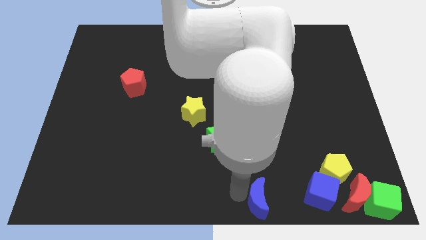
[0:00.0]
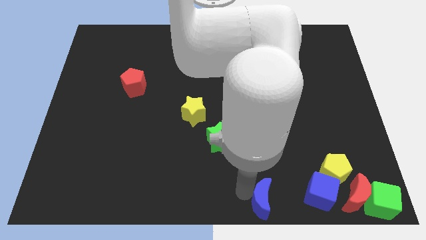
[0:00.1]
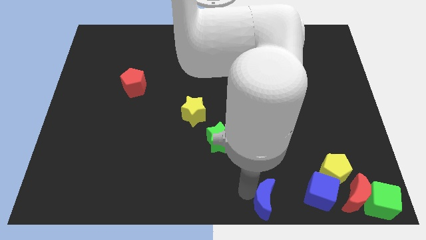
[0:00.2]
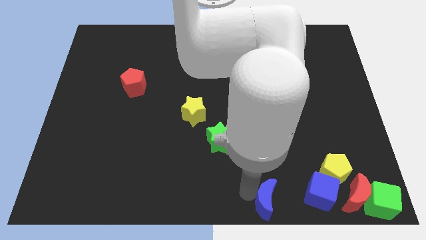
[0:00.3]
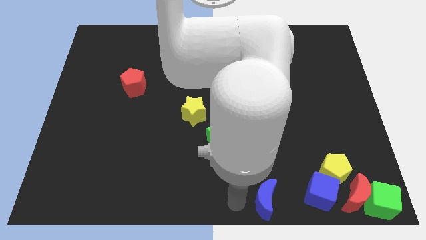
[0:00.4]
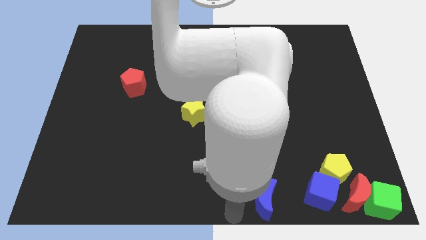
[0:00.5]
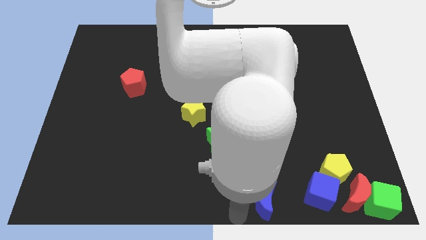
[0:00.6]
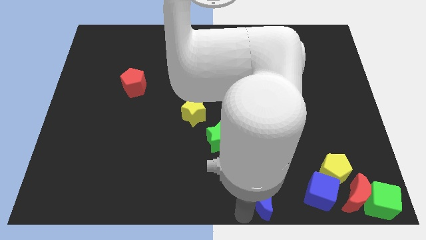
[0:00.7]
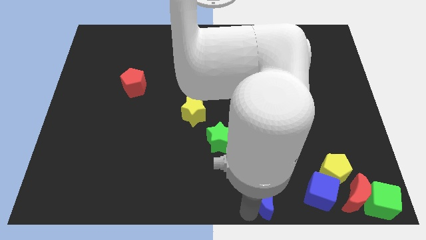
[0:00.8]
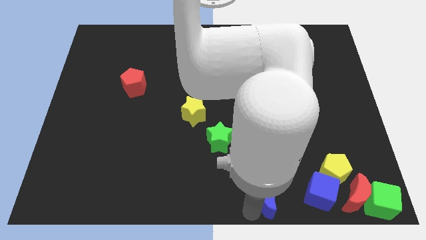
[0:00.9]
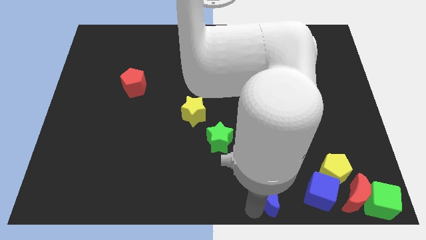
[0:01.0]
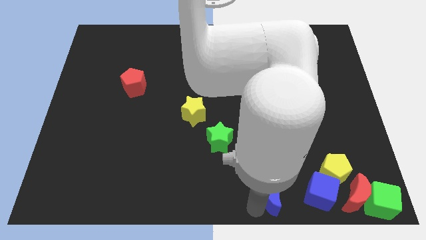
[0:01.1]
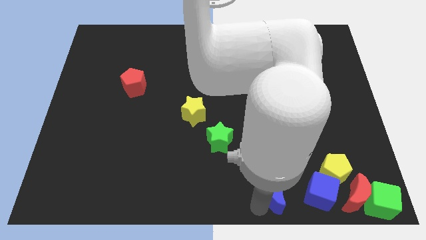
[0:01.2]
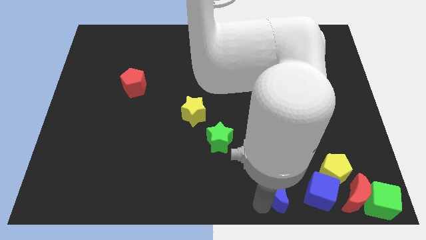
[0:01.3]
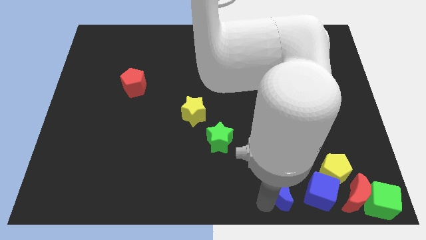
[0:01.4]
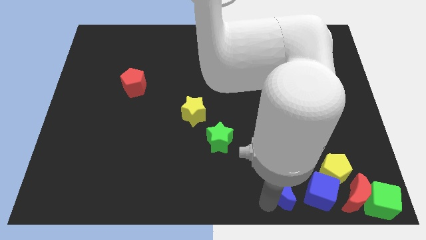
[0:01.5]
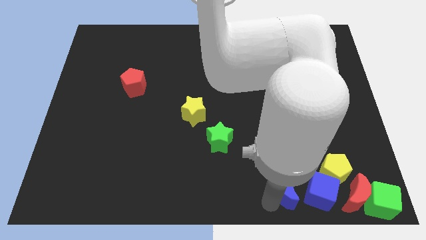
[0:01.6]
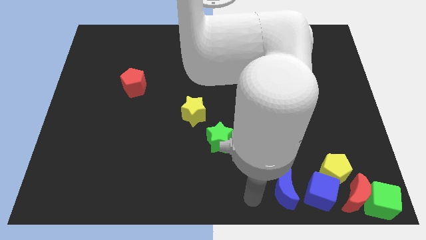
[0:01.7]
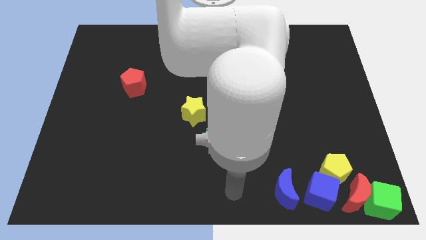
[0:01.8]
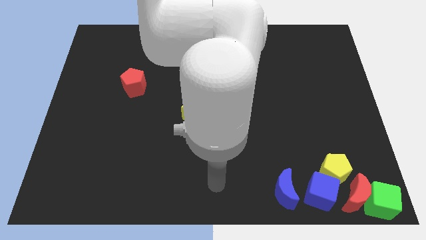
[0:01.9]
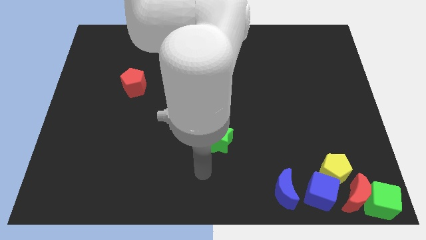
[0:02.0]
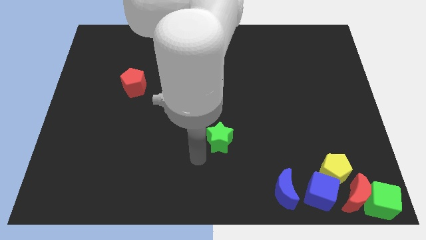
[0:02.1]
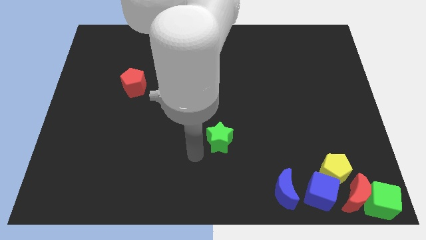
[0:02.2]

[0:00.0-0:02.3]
move the blue moon close to the blue cube

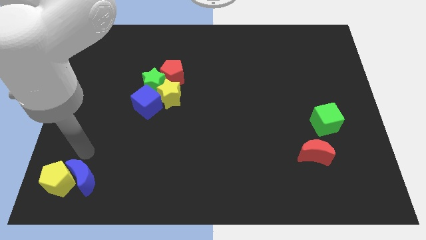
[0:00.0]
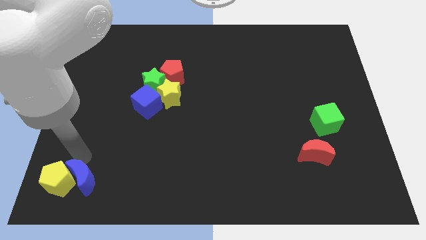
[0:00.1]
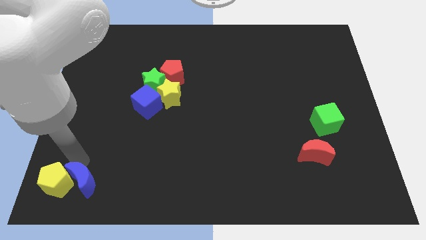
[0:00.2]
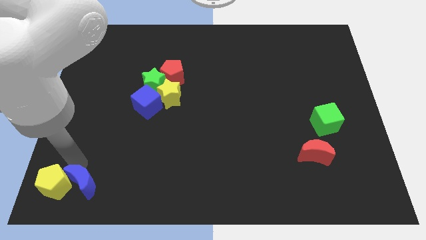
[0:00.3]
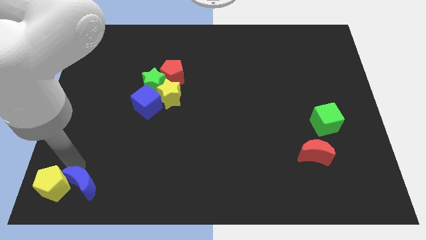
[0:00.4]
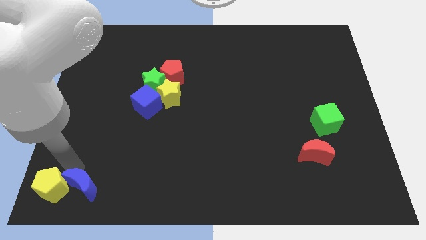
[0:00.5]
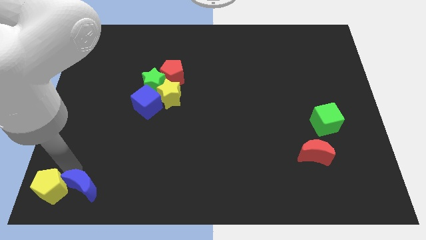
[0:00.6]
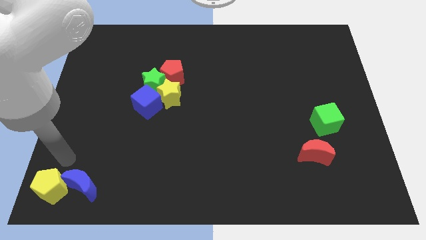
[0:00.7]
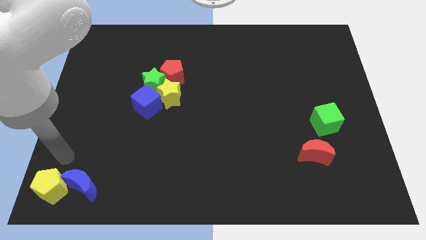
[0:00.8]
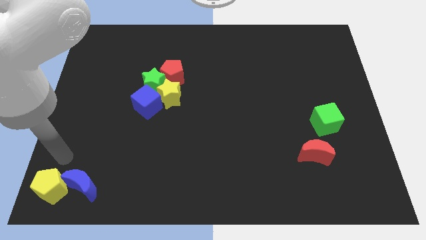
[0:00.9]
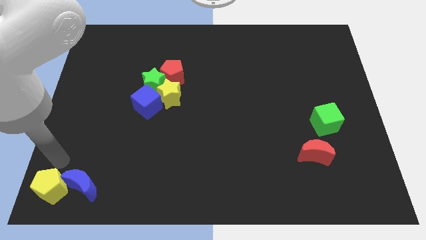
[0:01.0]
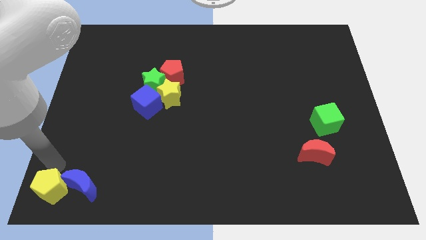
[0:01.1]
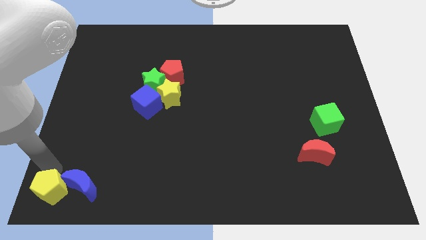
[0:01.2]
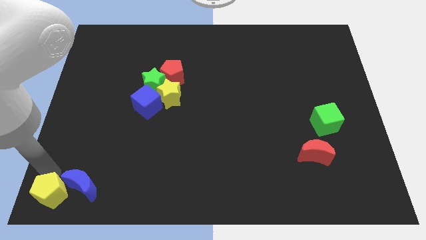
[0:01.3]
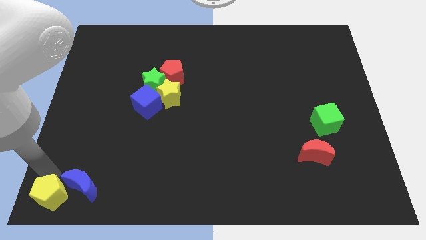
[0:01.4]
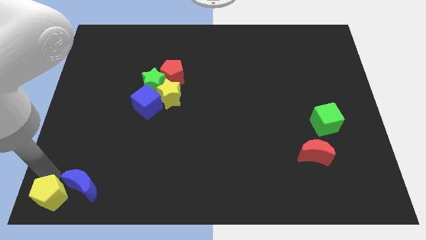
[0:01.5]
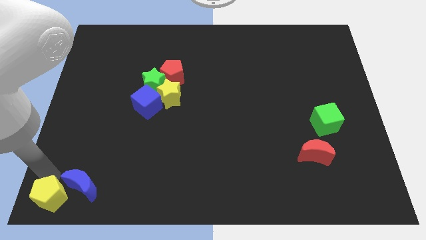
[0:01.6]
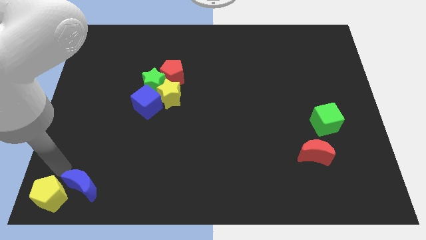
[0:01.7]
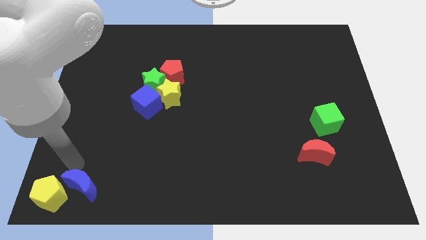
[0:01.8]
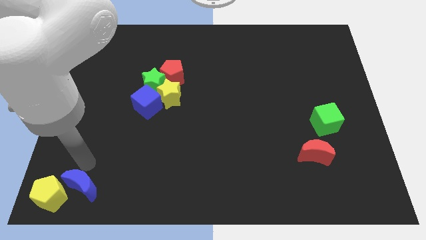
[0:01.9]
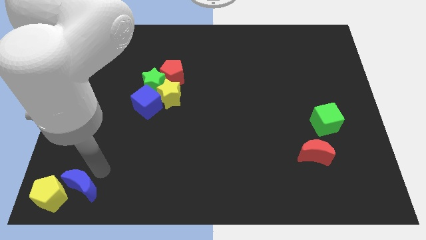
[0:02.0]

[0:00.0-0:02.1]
separate yellow pentagon and the blue moon

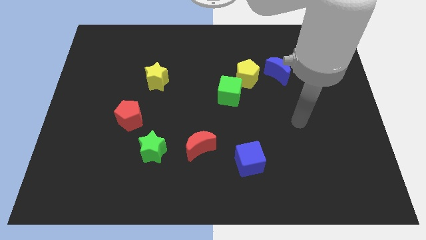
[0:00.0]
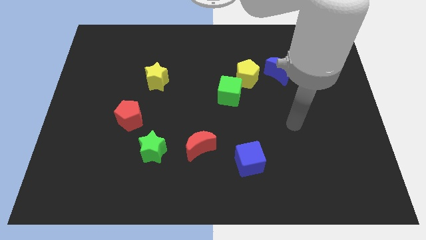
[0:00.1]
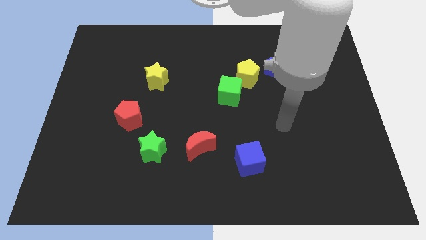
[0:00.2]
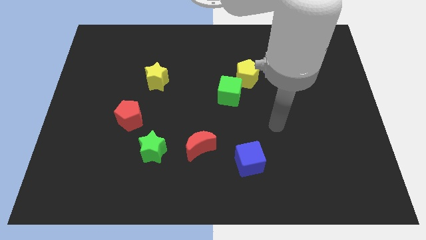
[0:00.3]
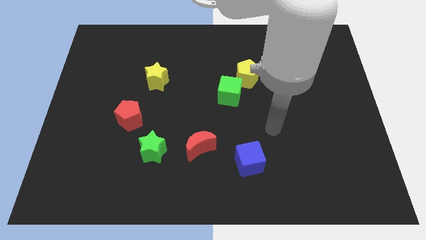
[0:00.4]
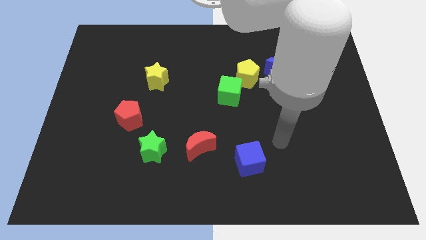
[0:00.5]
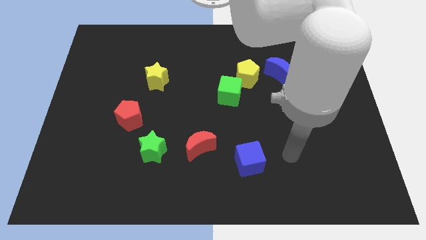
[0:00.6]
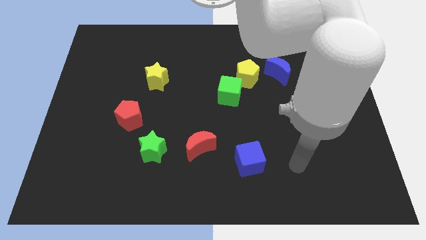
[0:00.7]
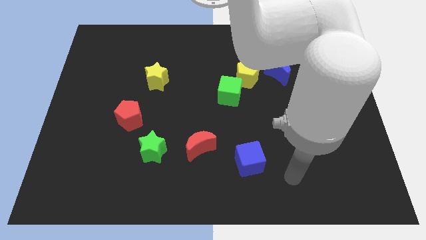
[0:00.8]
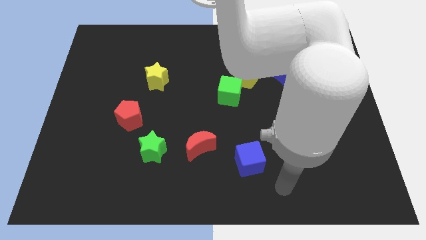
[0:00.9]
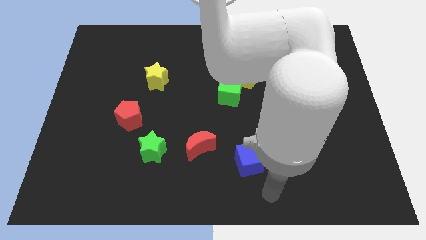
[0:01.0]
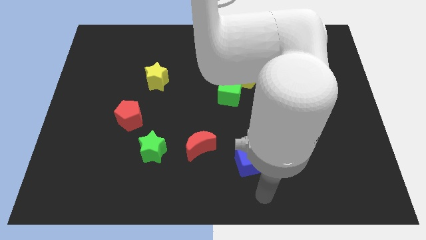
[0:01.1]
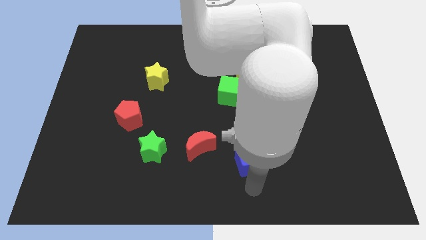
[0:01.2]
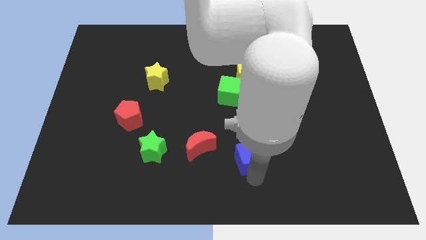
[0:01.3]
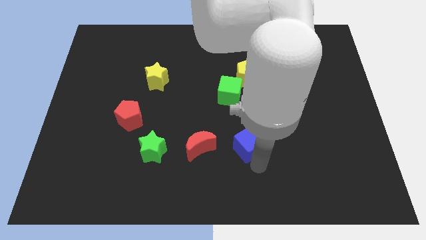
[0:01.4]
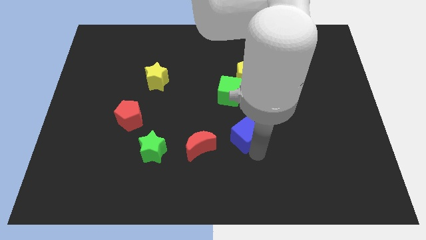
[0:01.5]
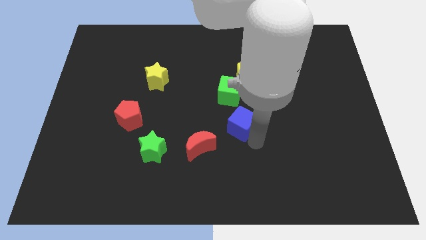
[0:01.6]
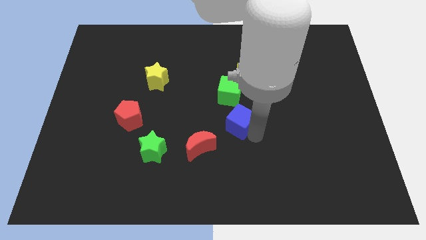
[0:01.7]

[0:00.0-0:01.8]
slide the blue cube diagonally top right to the red moon

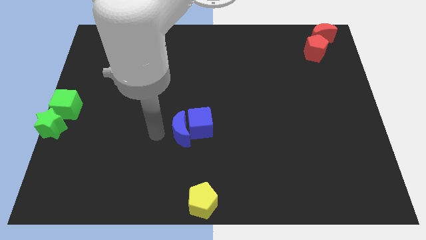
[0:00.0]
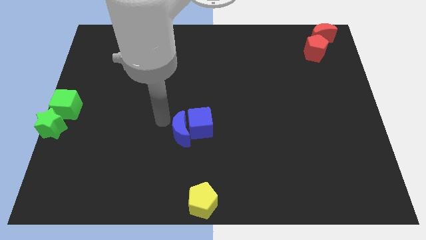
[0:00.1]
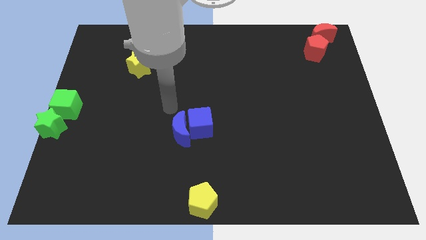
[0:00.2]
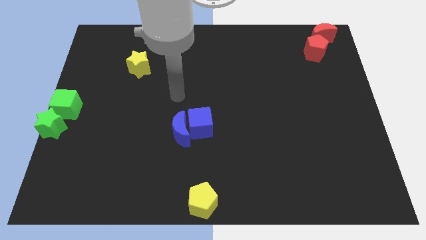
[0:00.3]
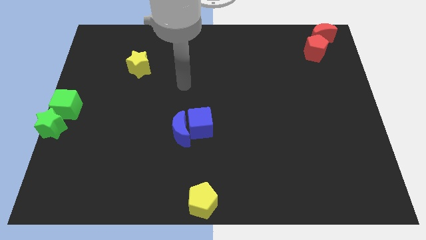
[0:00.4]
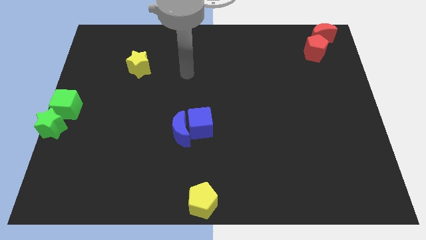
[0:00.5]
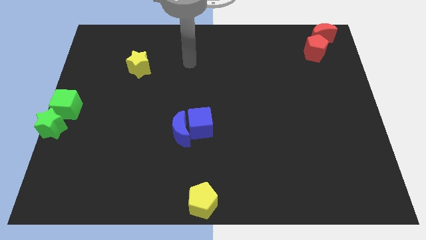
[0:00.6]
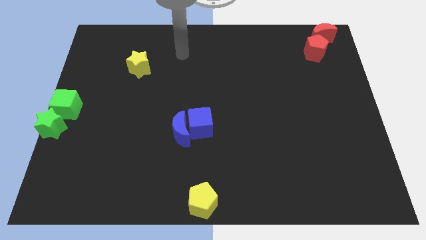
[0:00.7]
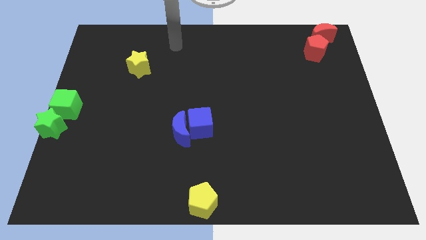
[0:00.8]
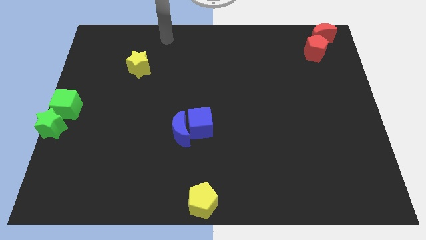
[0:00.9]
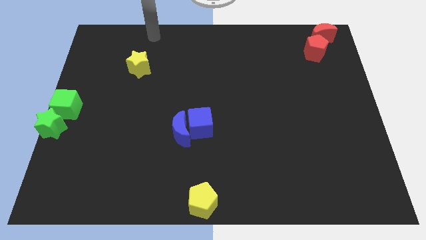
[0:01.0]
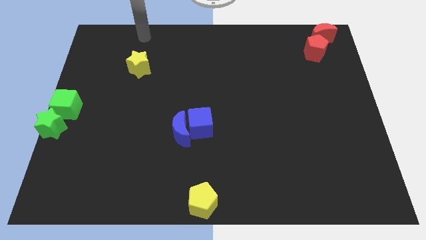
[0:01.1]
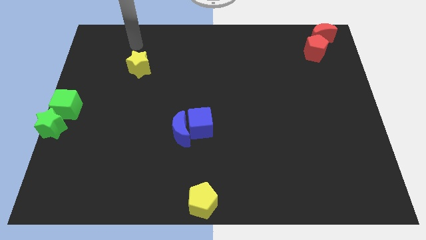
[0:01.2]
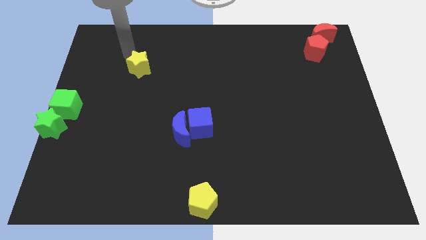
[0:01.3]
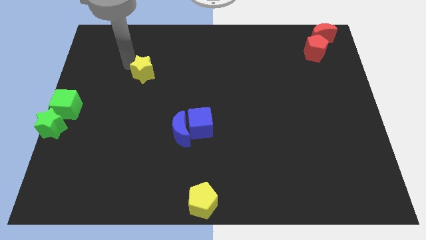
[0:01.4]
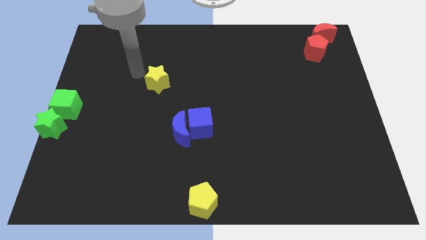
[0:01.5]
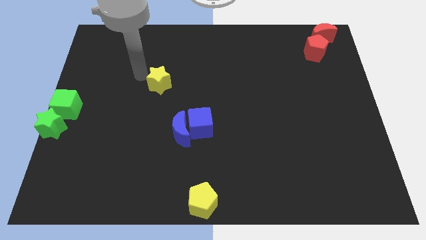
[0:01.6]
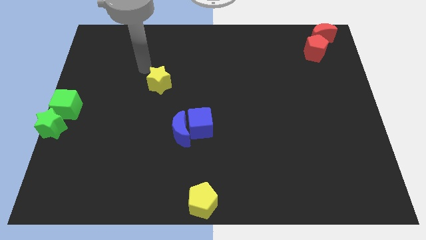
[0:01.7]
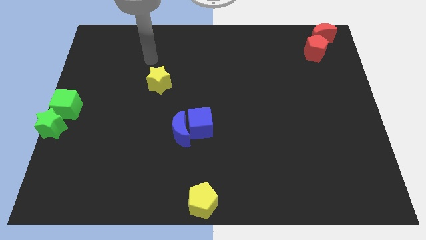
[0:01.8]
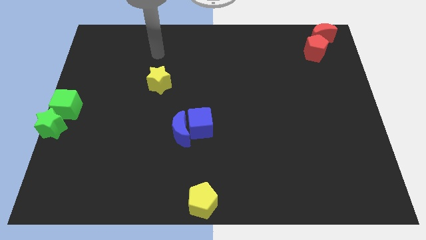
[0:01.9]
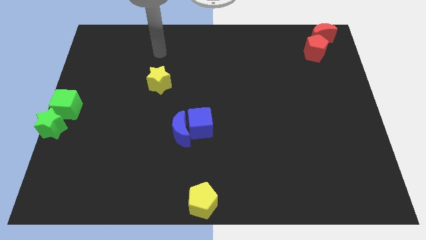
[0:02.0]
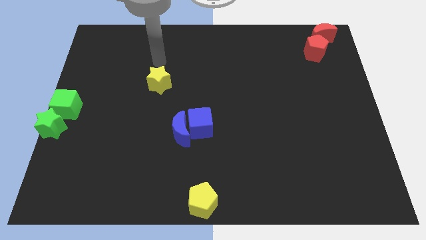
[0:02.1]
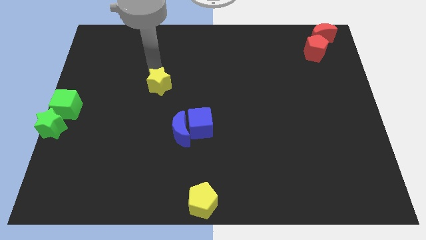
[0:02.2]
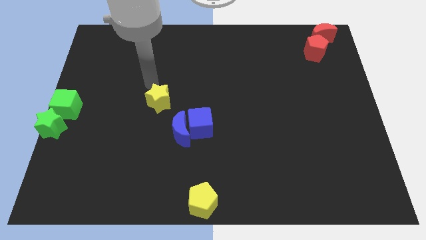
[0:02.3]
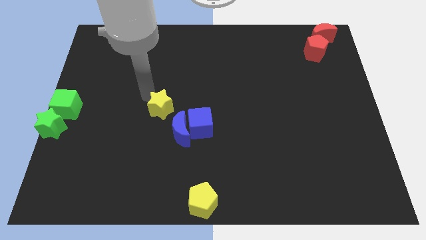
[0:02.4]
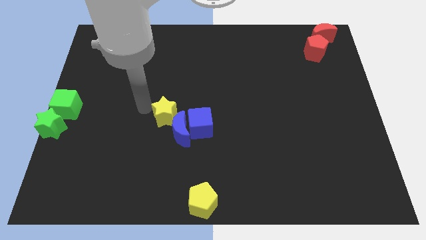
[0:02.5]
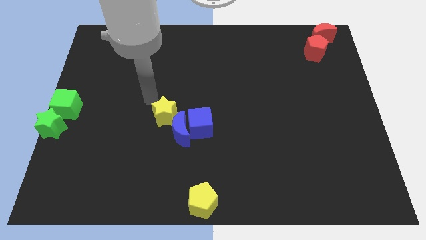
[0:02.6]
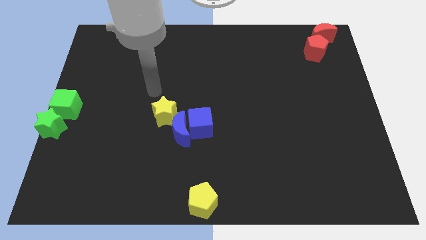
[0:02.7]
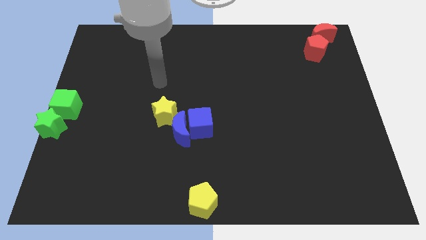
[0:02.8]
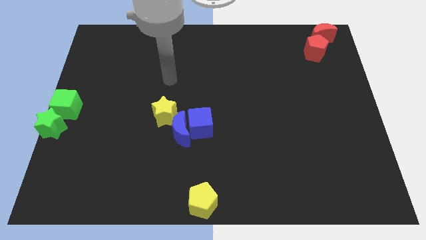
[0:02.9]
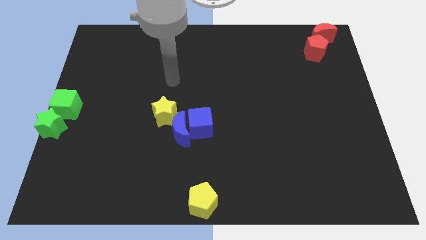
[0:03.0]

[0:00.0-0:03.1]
move the star close to the blue crescent
